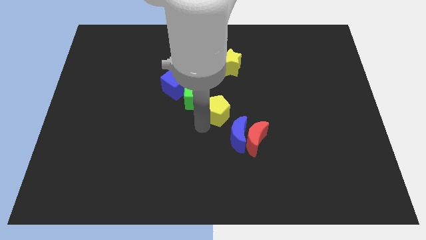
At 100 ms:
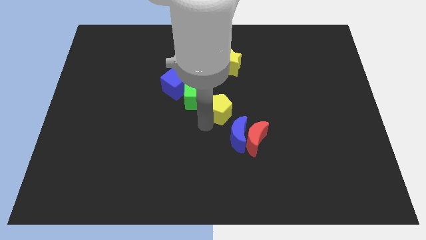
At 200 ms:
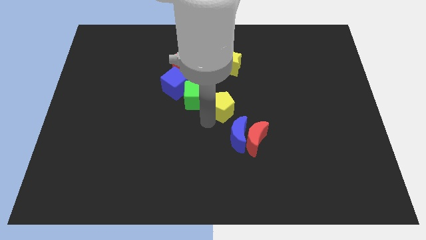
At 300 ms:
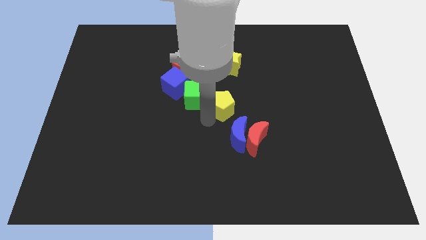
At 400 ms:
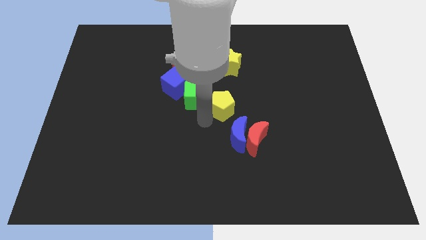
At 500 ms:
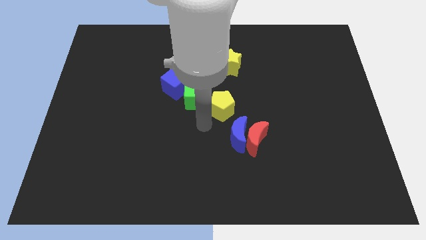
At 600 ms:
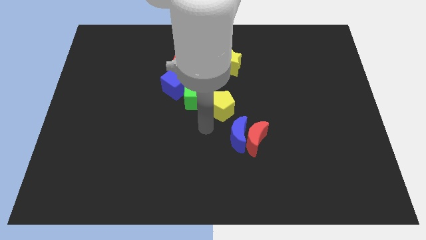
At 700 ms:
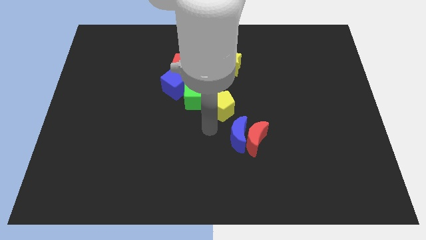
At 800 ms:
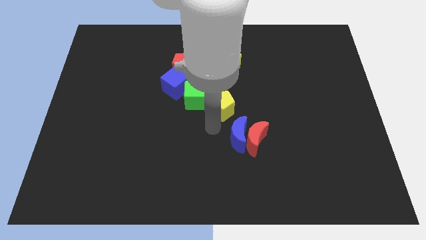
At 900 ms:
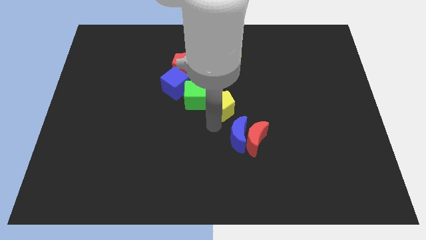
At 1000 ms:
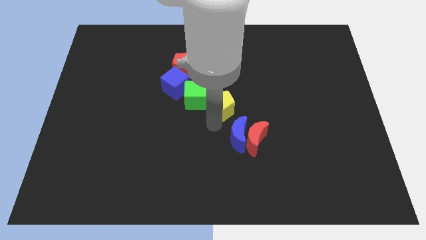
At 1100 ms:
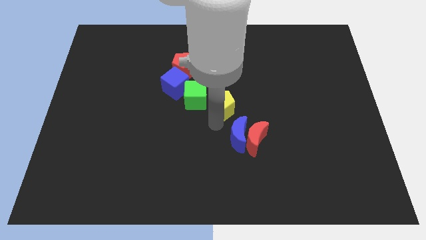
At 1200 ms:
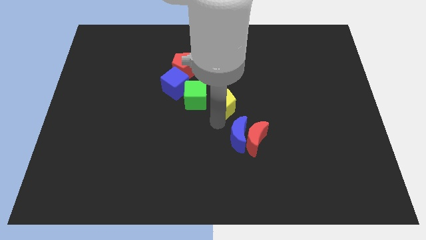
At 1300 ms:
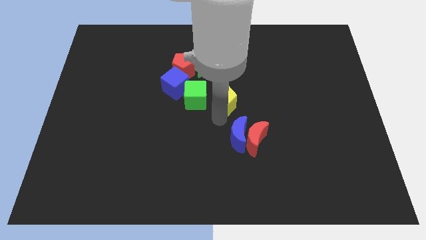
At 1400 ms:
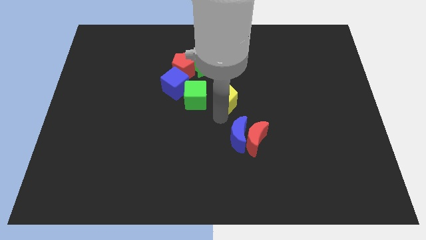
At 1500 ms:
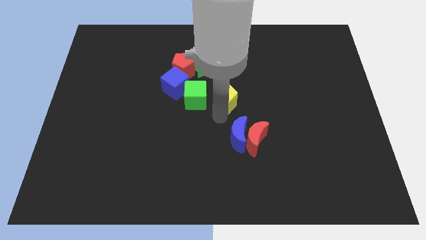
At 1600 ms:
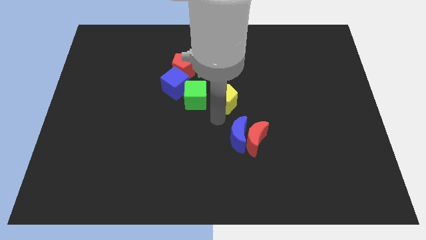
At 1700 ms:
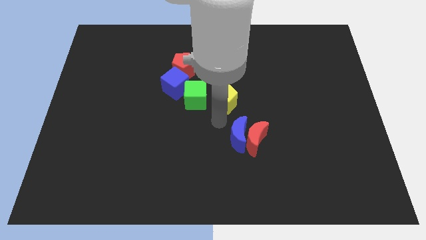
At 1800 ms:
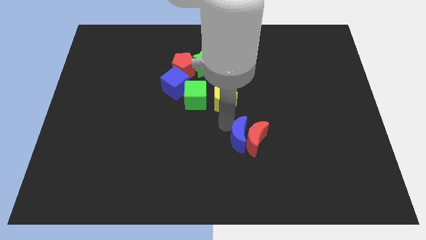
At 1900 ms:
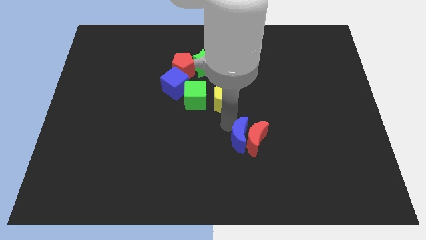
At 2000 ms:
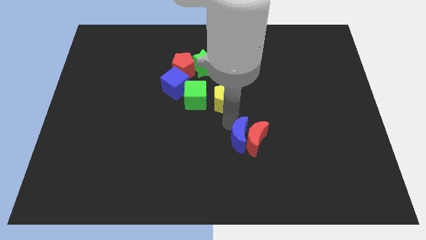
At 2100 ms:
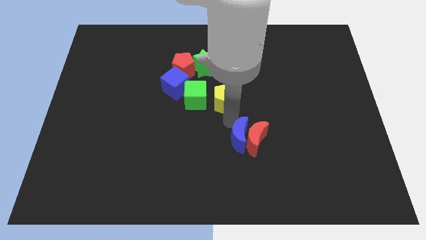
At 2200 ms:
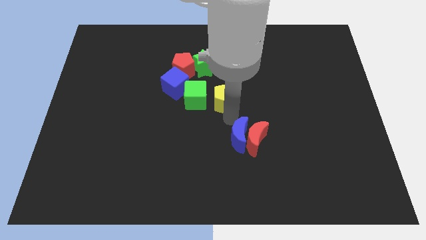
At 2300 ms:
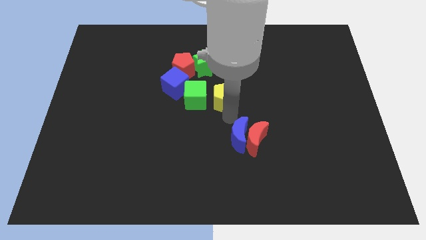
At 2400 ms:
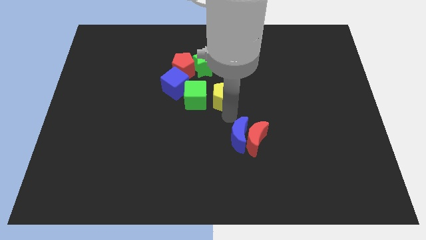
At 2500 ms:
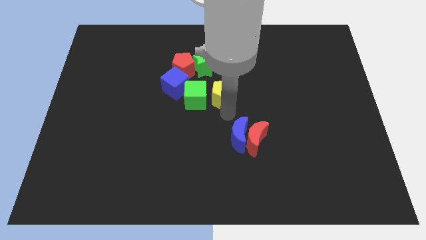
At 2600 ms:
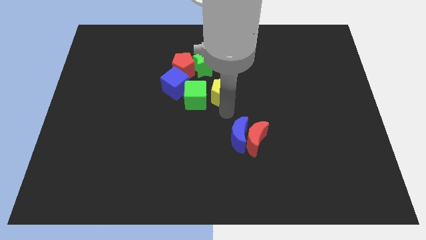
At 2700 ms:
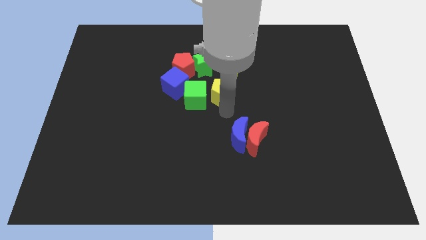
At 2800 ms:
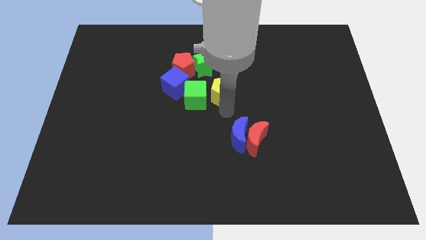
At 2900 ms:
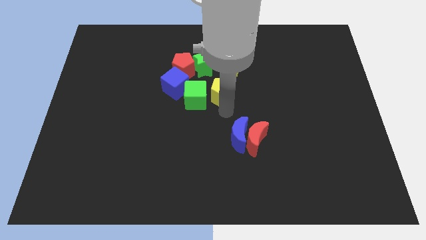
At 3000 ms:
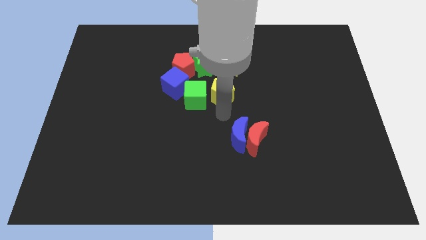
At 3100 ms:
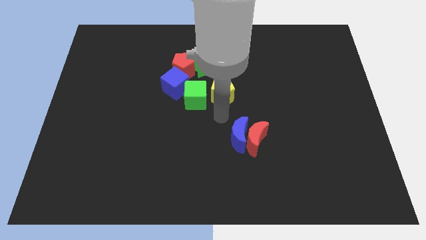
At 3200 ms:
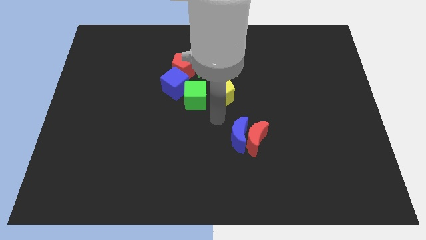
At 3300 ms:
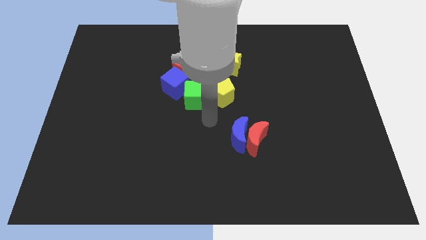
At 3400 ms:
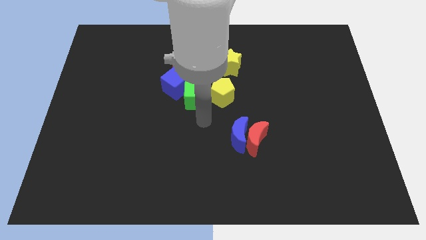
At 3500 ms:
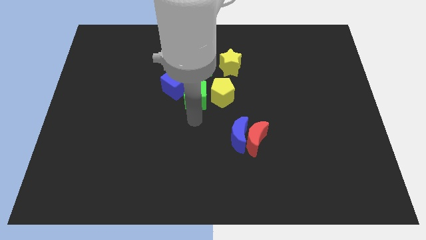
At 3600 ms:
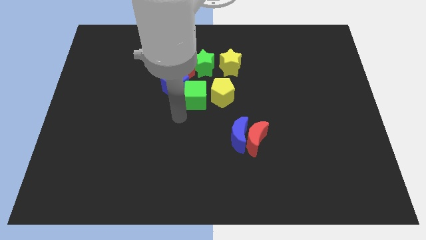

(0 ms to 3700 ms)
move the yellow pentagon right beside the green cube

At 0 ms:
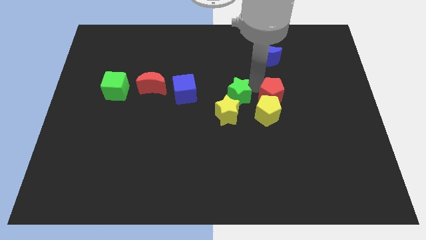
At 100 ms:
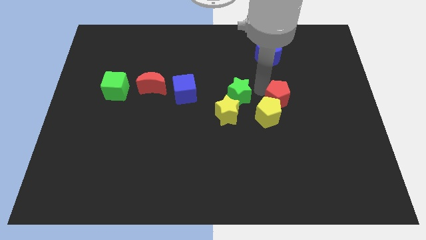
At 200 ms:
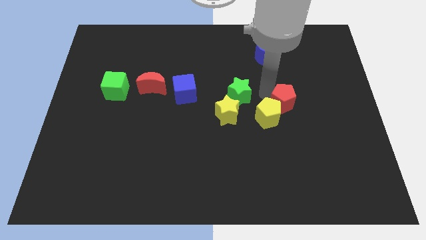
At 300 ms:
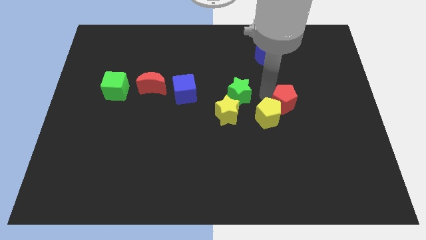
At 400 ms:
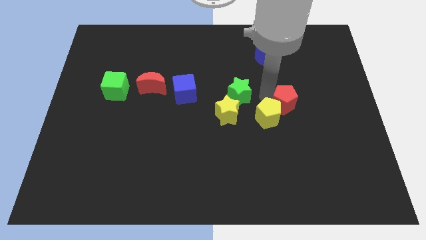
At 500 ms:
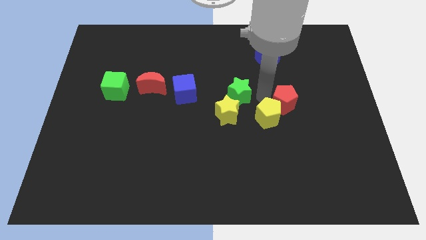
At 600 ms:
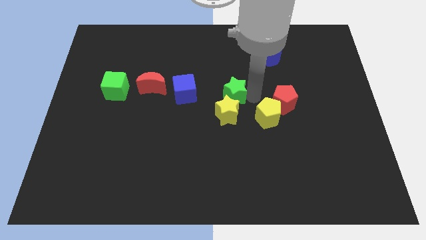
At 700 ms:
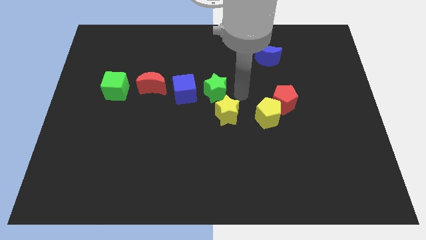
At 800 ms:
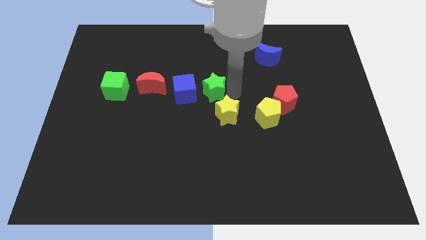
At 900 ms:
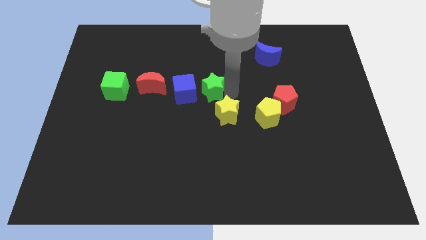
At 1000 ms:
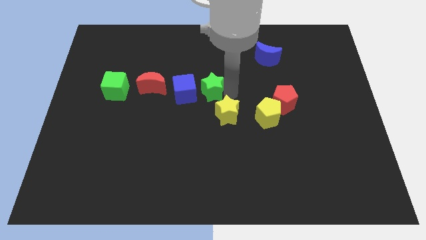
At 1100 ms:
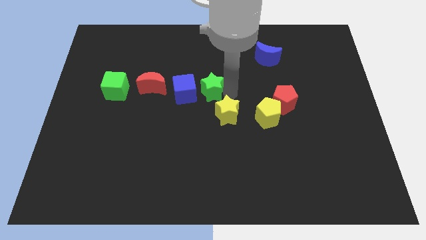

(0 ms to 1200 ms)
separate red pentagon from green star

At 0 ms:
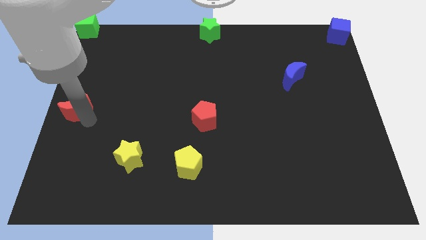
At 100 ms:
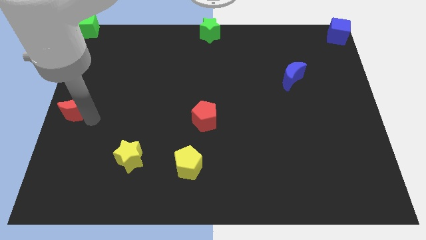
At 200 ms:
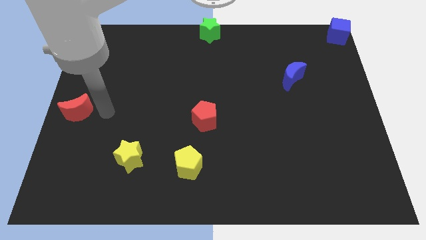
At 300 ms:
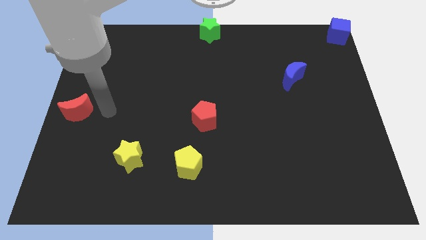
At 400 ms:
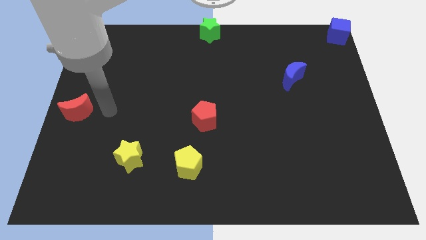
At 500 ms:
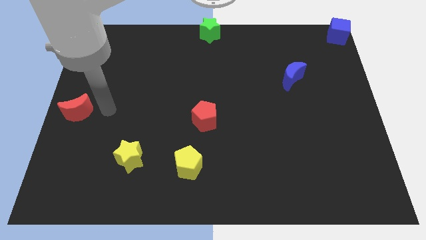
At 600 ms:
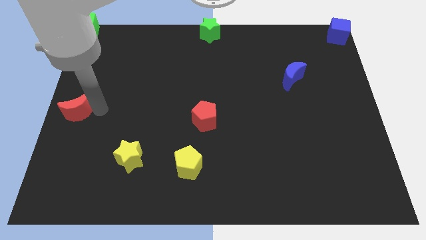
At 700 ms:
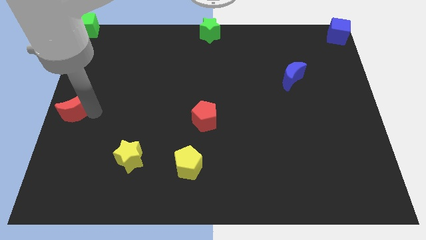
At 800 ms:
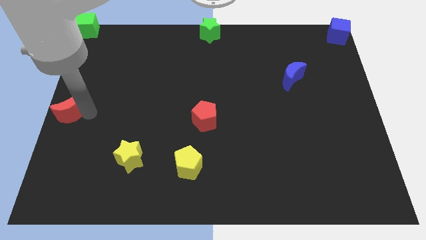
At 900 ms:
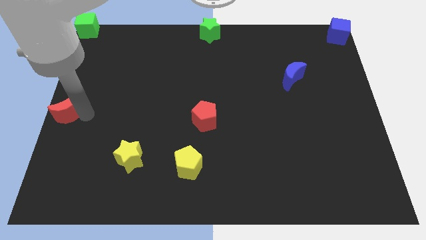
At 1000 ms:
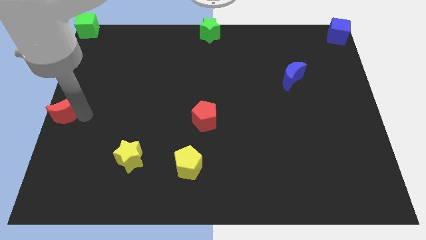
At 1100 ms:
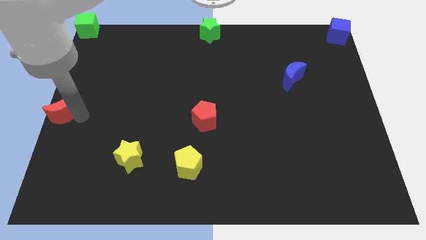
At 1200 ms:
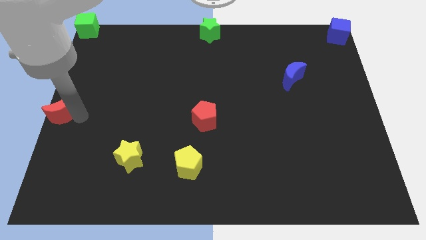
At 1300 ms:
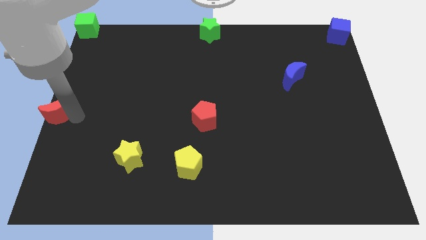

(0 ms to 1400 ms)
move the red crescent to the center left of the board

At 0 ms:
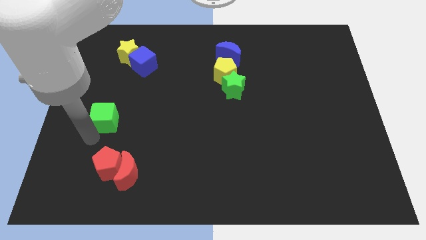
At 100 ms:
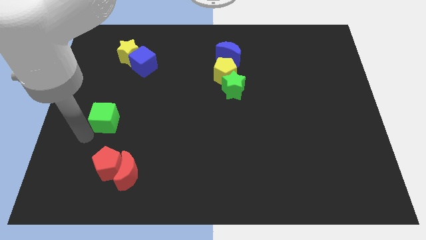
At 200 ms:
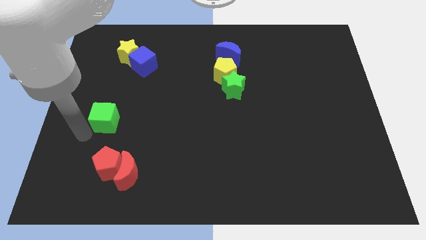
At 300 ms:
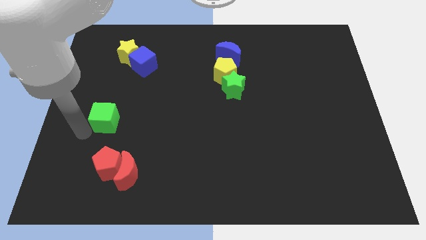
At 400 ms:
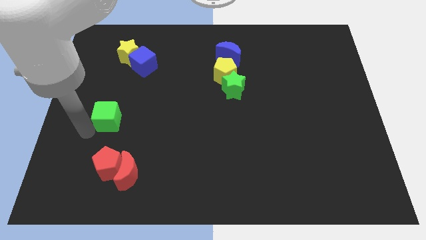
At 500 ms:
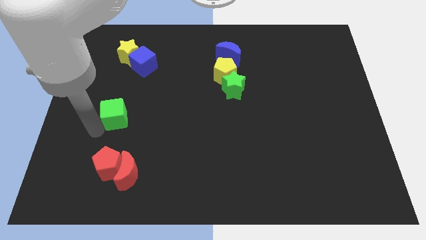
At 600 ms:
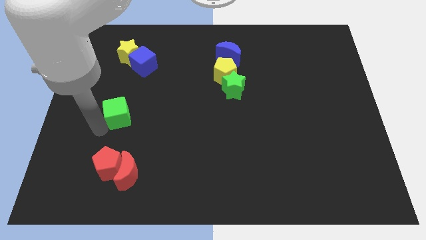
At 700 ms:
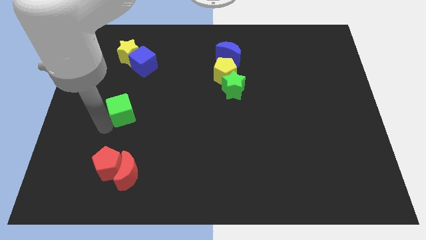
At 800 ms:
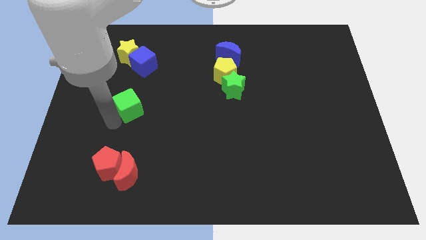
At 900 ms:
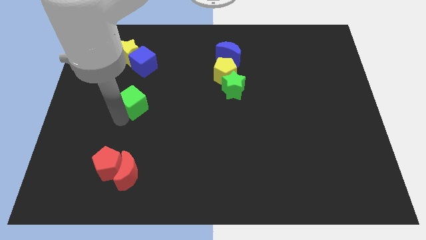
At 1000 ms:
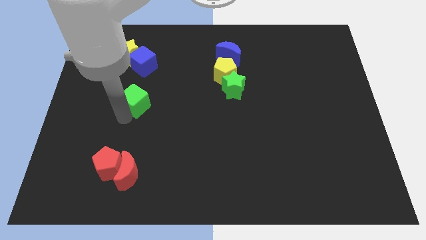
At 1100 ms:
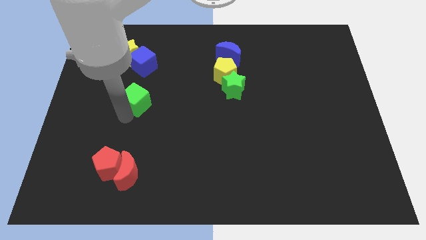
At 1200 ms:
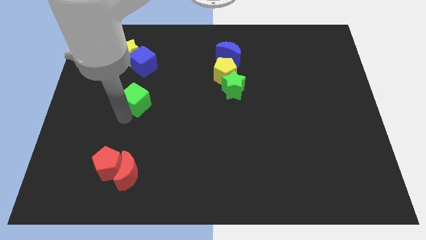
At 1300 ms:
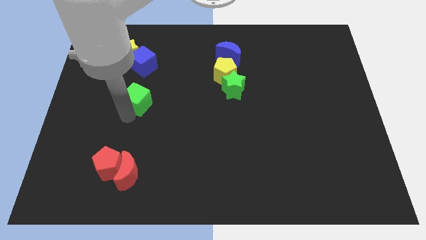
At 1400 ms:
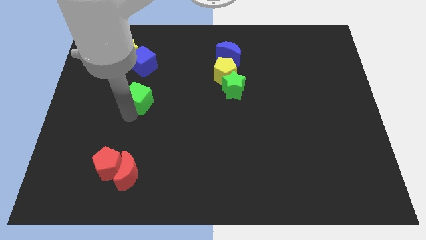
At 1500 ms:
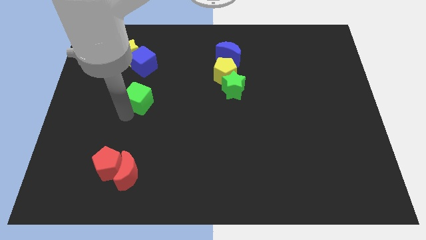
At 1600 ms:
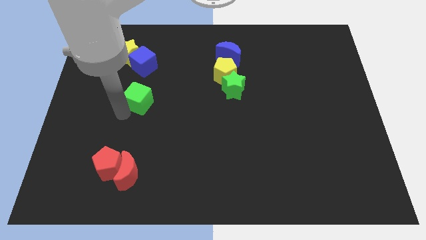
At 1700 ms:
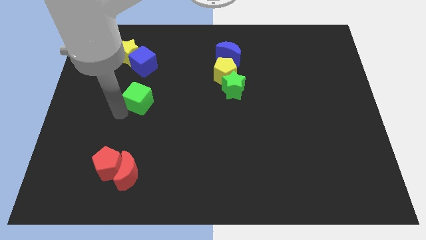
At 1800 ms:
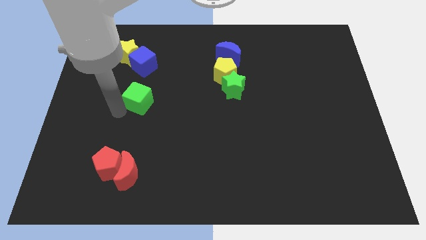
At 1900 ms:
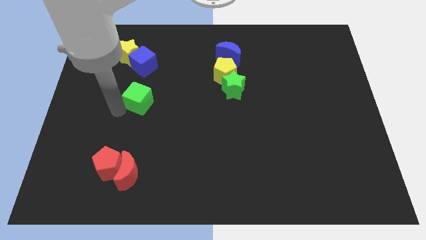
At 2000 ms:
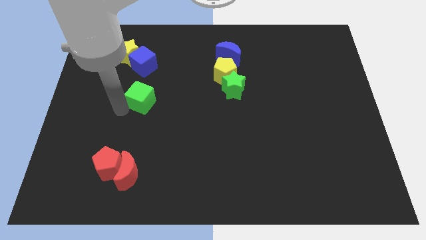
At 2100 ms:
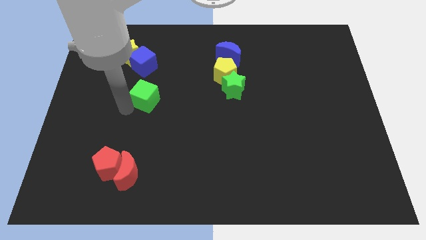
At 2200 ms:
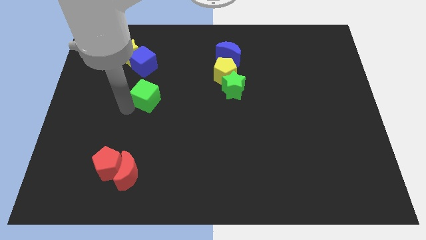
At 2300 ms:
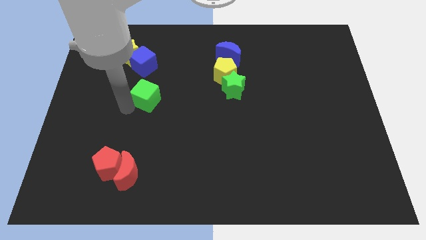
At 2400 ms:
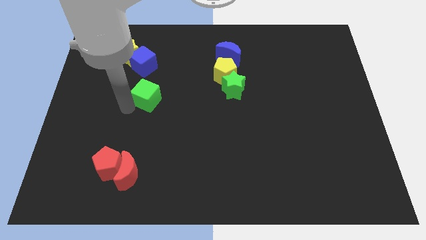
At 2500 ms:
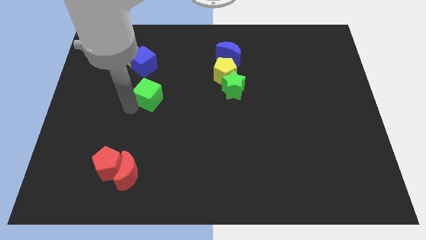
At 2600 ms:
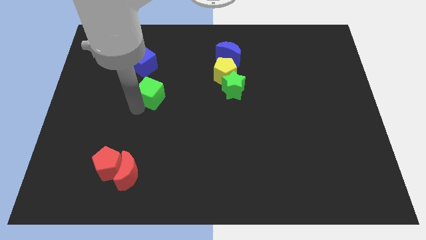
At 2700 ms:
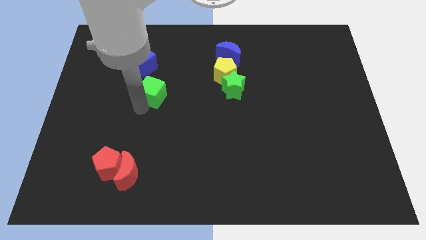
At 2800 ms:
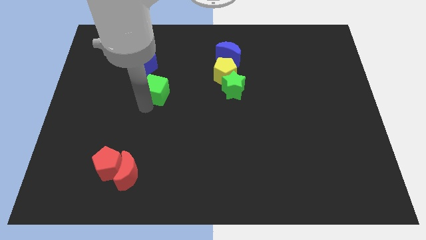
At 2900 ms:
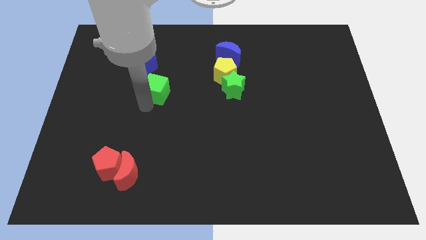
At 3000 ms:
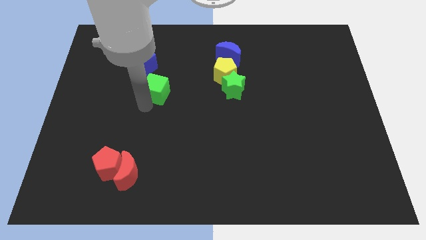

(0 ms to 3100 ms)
move the green cube below the blue cube
